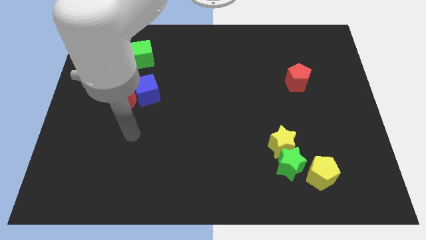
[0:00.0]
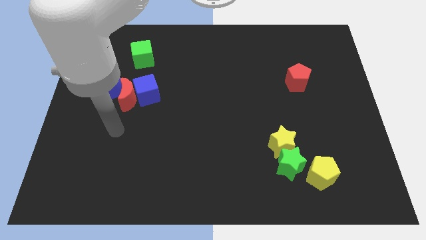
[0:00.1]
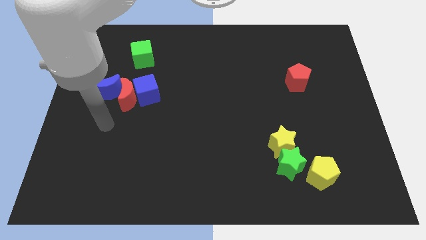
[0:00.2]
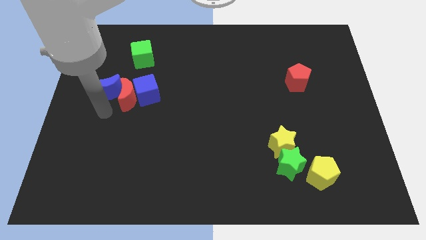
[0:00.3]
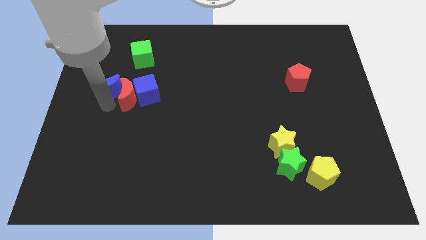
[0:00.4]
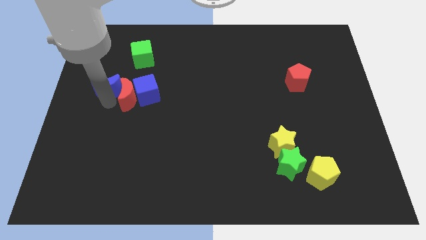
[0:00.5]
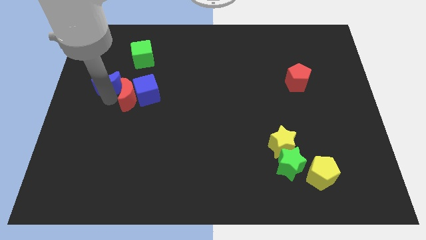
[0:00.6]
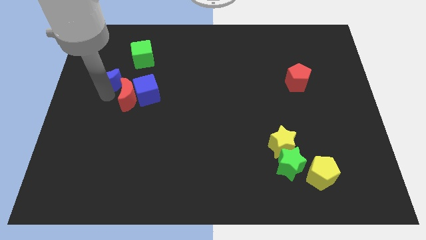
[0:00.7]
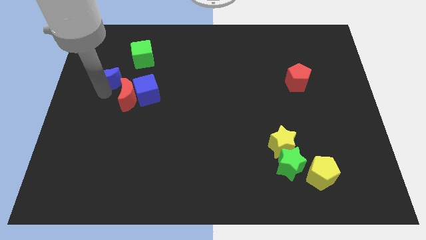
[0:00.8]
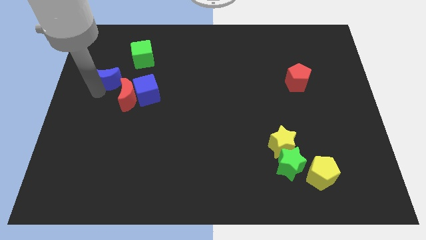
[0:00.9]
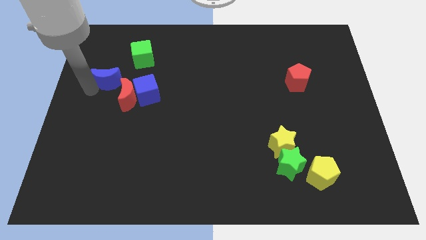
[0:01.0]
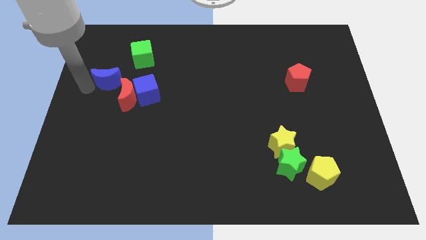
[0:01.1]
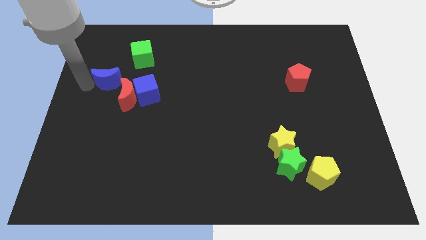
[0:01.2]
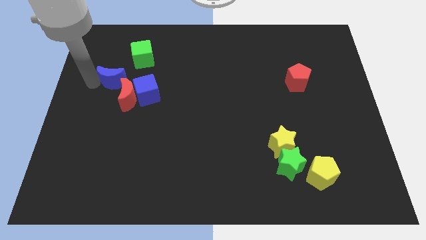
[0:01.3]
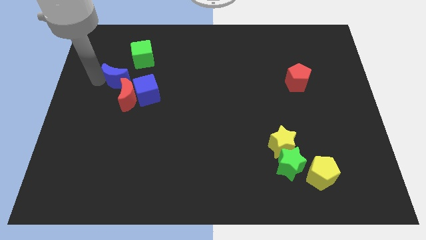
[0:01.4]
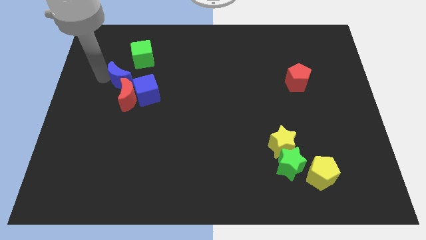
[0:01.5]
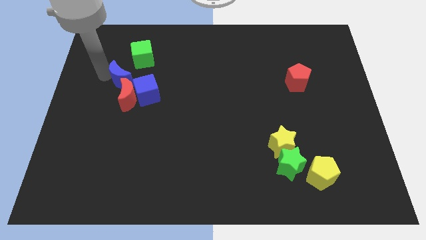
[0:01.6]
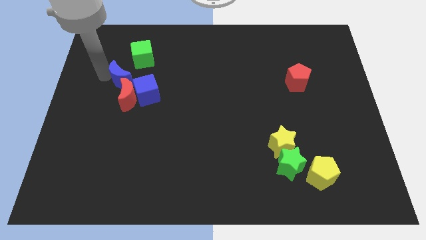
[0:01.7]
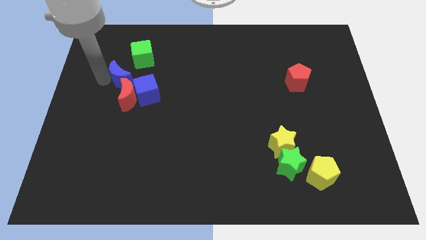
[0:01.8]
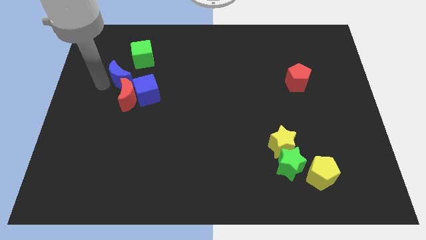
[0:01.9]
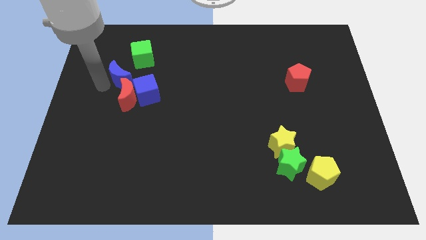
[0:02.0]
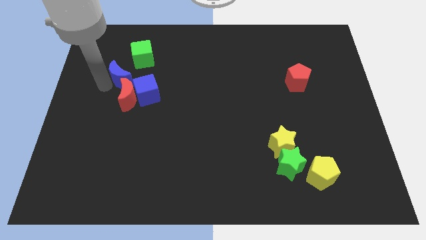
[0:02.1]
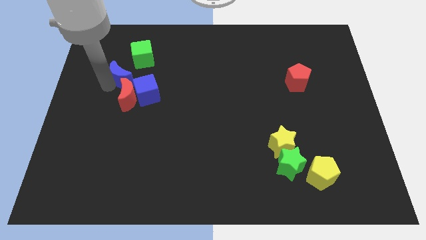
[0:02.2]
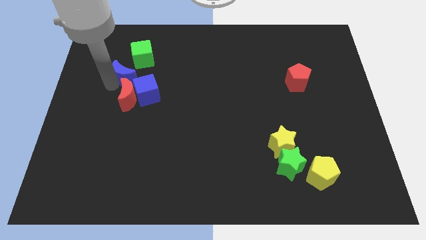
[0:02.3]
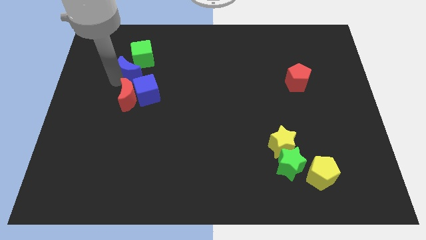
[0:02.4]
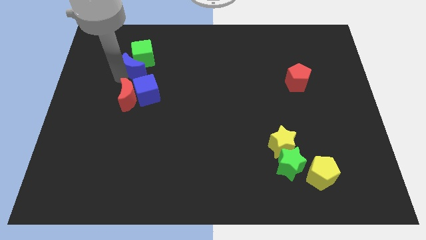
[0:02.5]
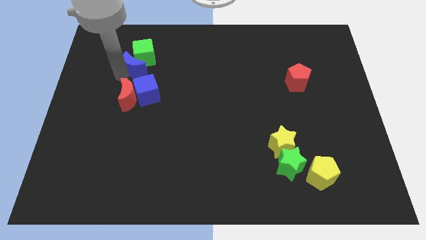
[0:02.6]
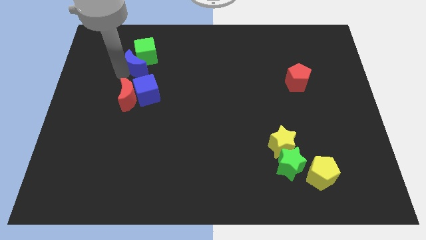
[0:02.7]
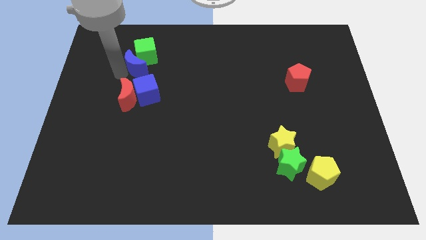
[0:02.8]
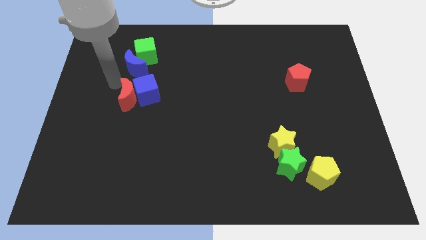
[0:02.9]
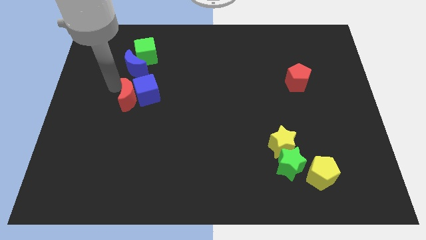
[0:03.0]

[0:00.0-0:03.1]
move blue moon into green cube

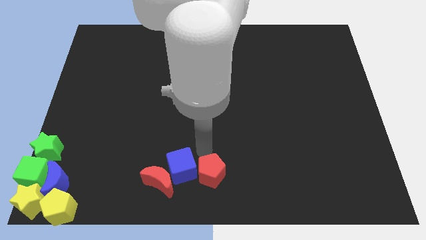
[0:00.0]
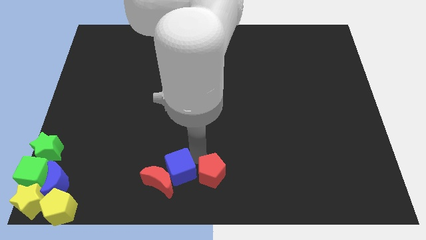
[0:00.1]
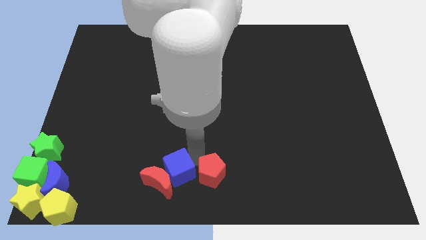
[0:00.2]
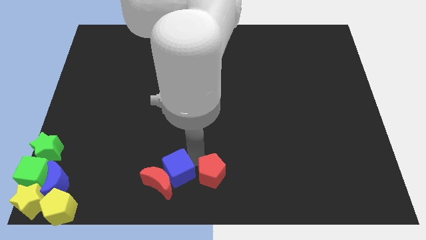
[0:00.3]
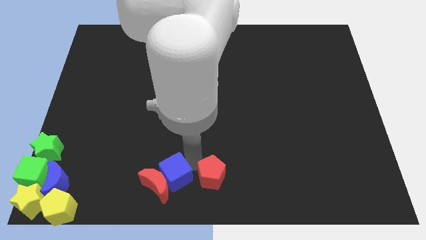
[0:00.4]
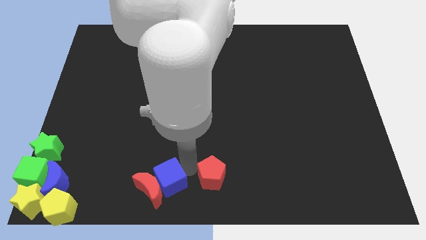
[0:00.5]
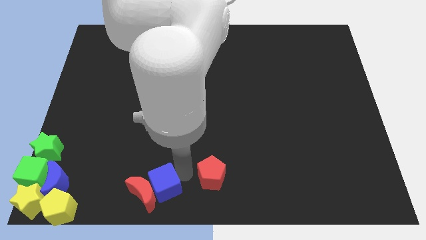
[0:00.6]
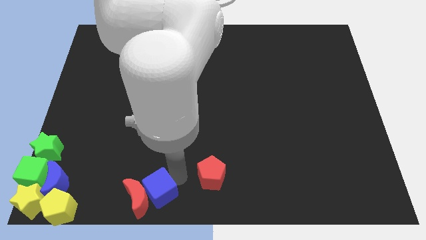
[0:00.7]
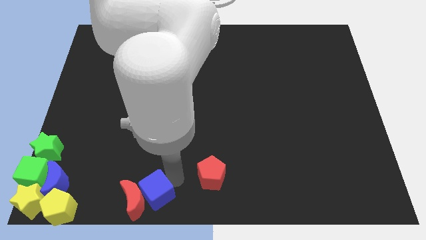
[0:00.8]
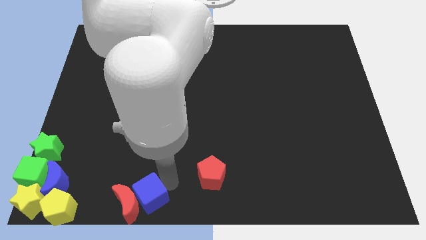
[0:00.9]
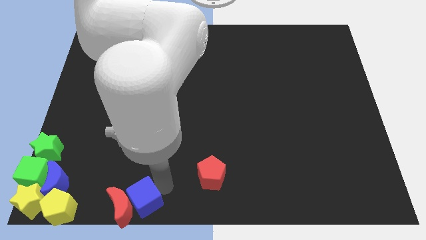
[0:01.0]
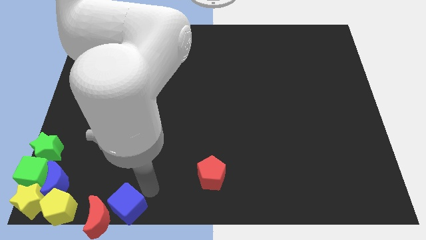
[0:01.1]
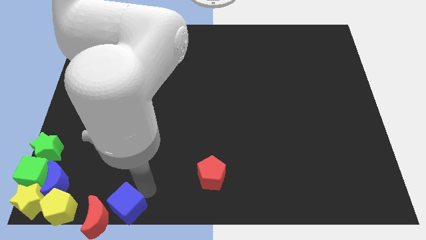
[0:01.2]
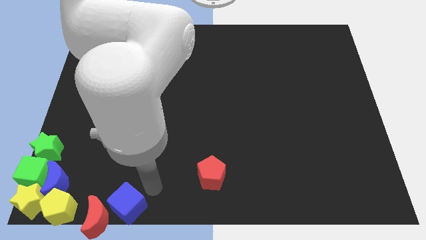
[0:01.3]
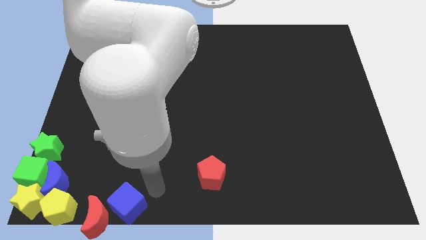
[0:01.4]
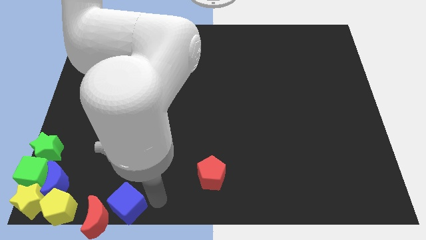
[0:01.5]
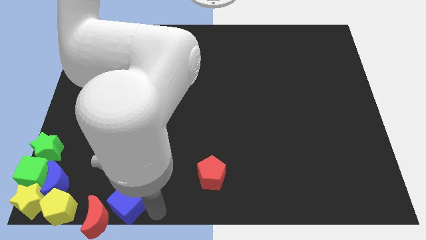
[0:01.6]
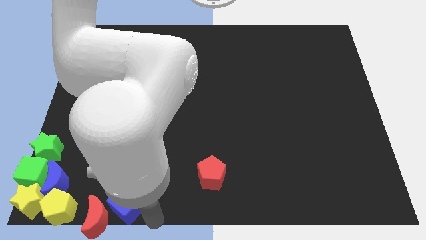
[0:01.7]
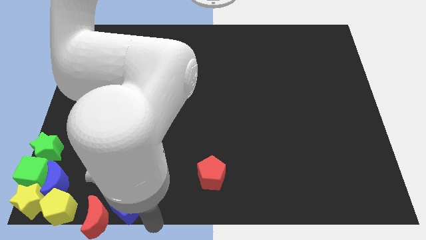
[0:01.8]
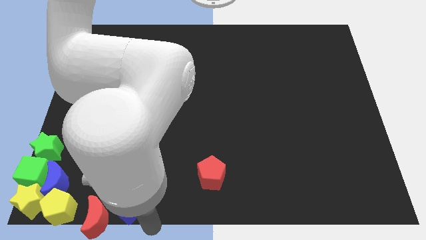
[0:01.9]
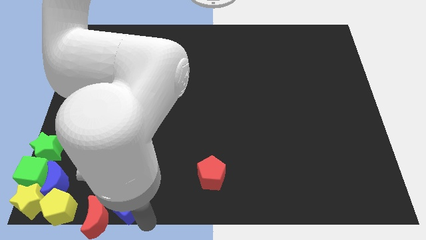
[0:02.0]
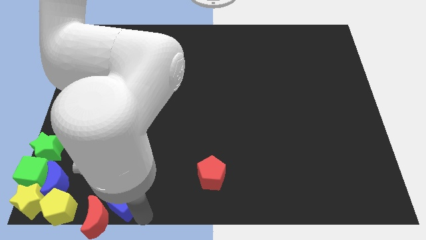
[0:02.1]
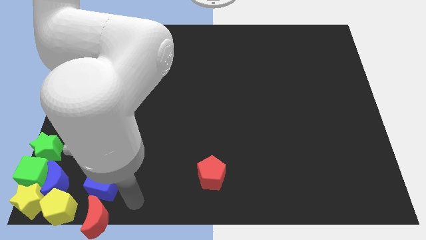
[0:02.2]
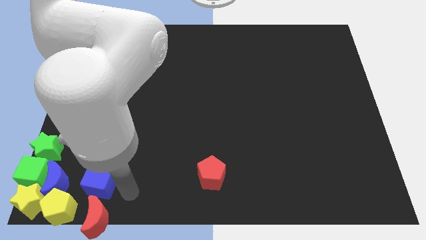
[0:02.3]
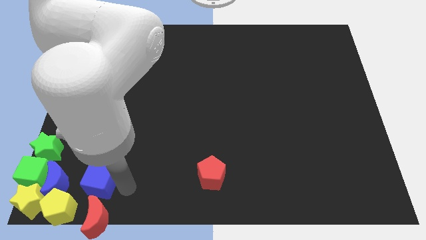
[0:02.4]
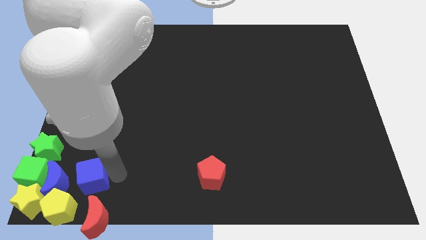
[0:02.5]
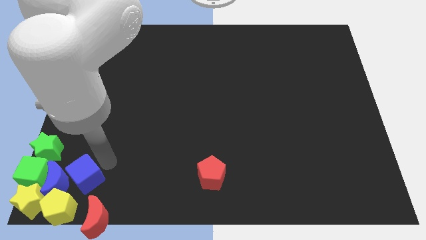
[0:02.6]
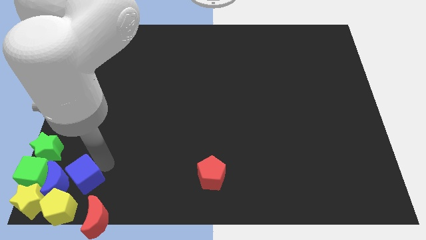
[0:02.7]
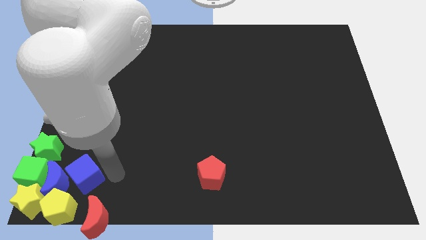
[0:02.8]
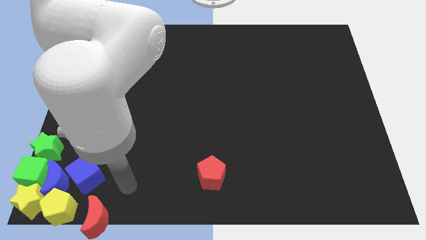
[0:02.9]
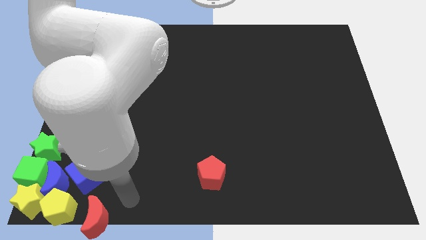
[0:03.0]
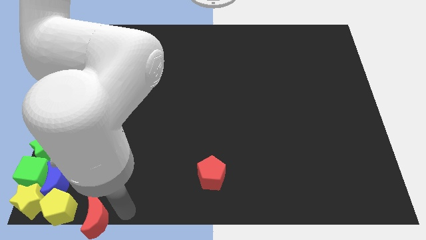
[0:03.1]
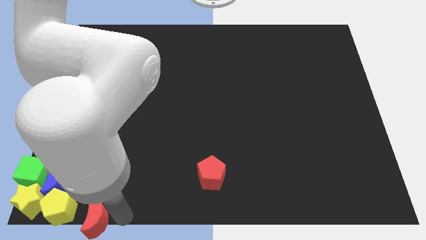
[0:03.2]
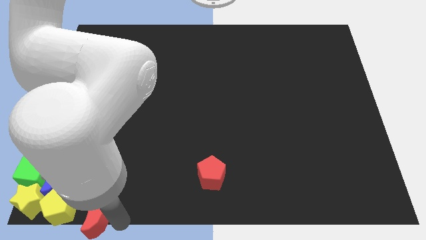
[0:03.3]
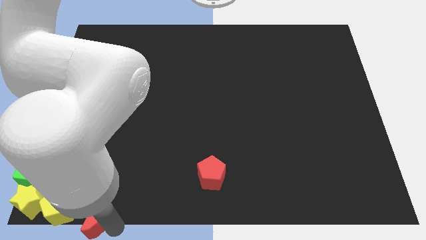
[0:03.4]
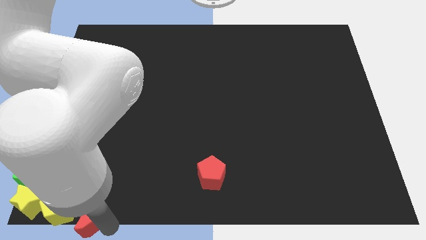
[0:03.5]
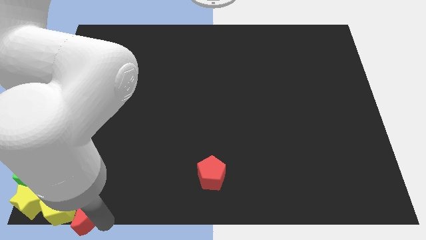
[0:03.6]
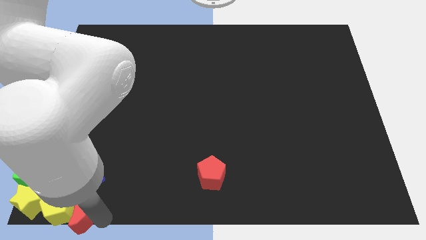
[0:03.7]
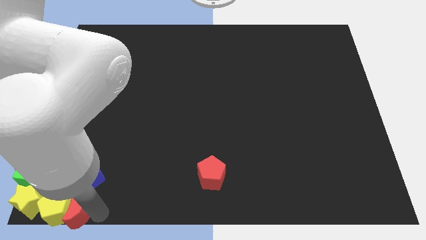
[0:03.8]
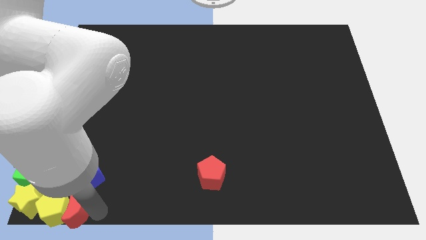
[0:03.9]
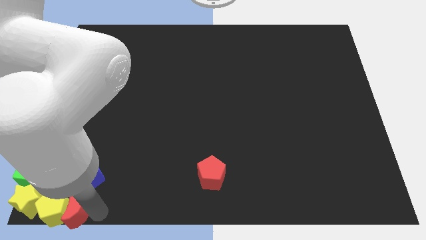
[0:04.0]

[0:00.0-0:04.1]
move the red moon blue cube to the bottom left of the board

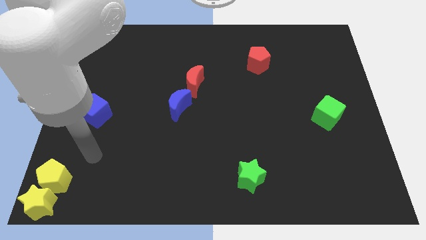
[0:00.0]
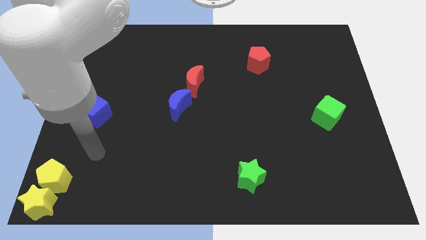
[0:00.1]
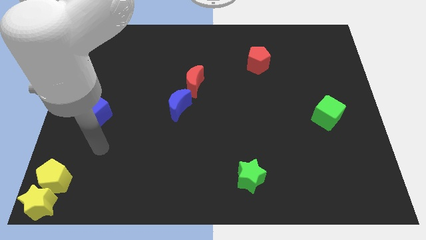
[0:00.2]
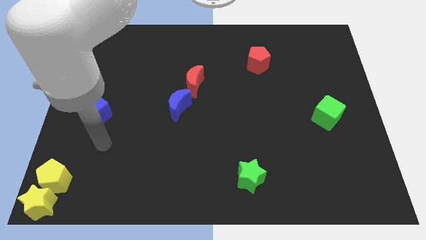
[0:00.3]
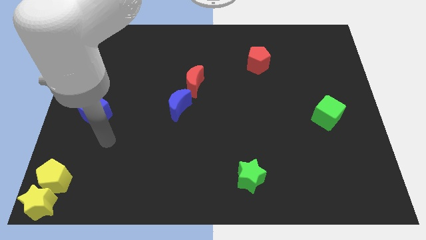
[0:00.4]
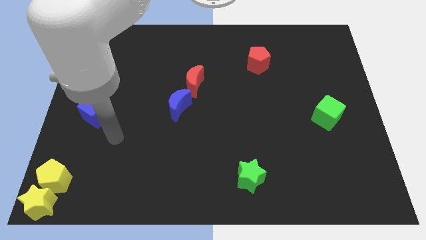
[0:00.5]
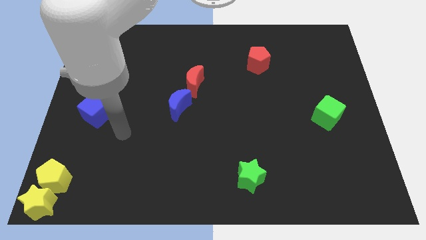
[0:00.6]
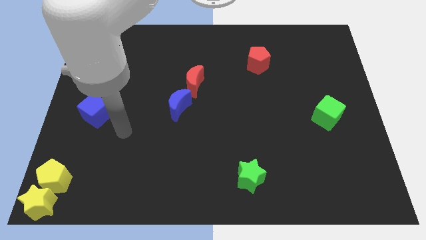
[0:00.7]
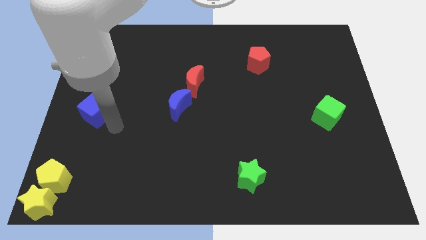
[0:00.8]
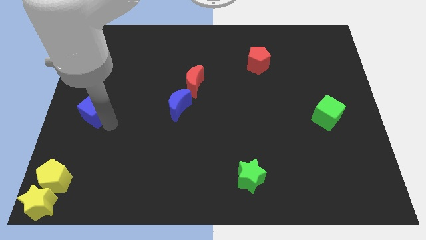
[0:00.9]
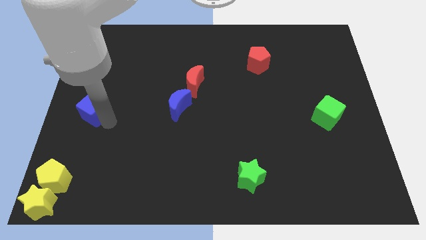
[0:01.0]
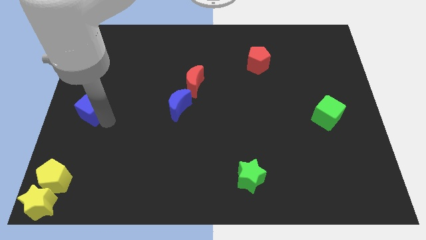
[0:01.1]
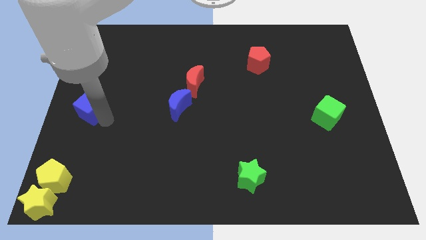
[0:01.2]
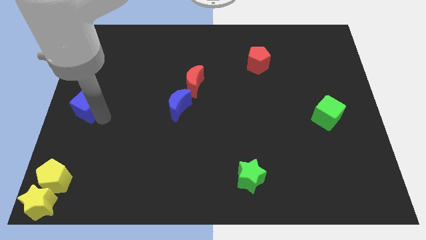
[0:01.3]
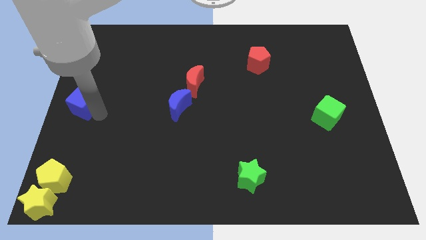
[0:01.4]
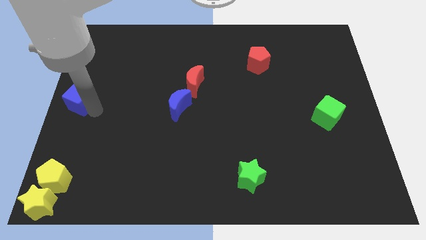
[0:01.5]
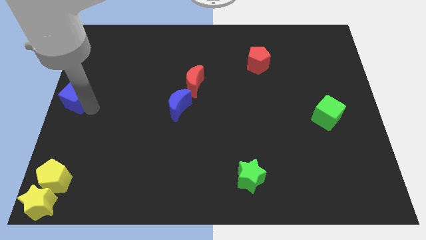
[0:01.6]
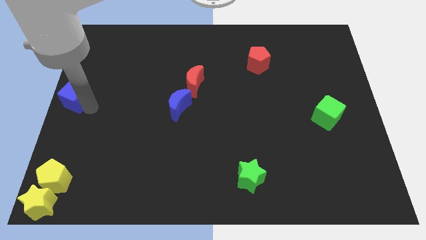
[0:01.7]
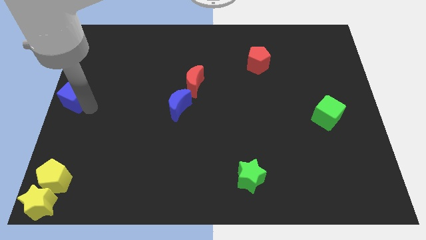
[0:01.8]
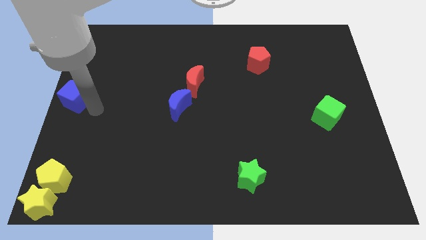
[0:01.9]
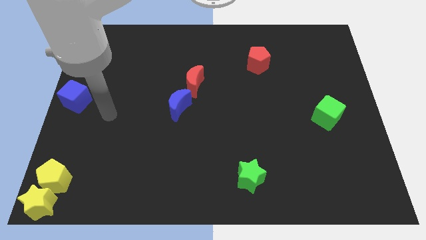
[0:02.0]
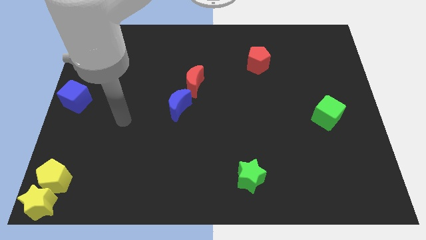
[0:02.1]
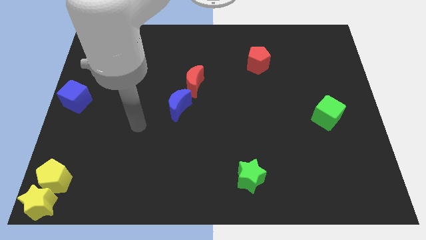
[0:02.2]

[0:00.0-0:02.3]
place the blue cube at the left center of the board
